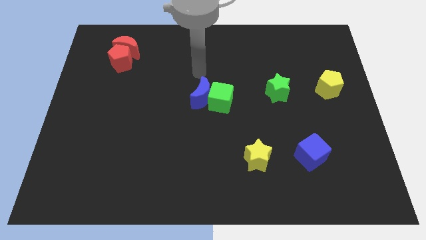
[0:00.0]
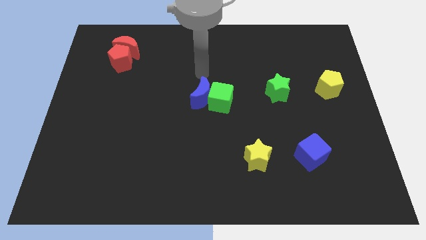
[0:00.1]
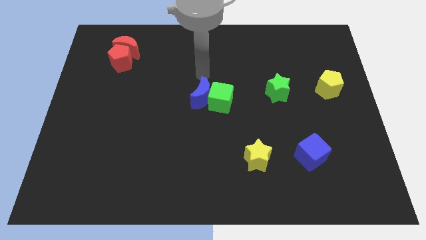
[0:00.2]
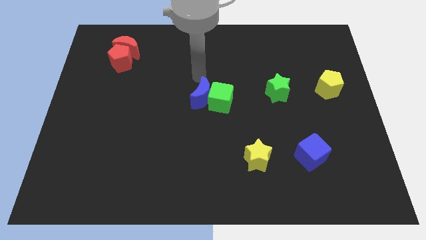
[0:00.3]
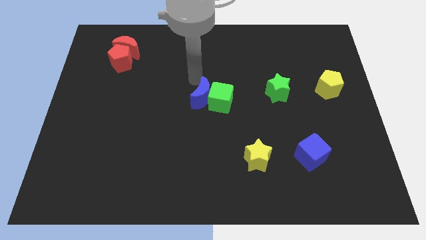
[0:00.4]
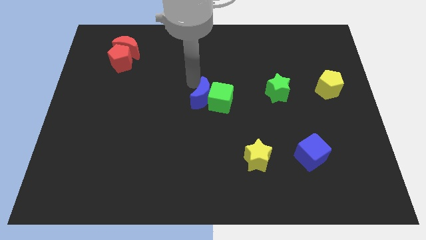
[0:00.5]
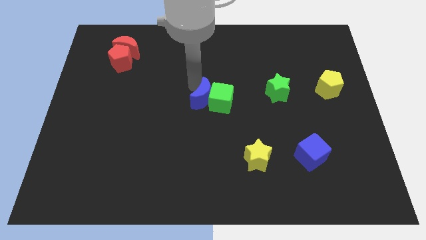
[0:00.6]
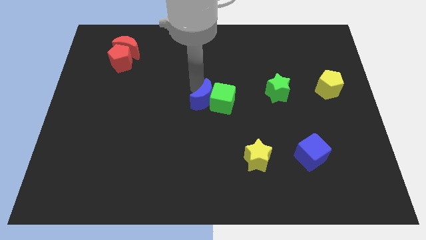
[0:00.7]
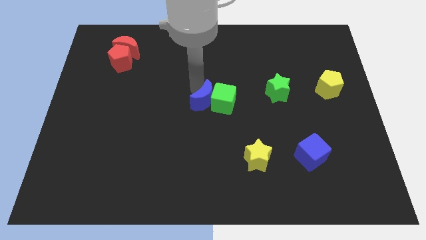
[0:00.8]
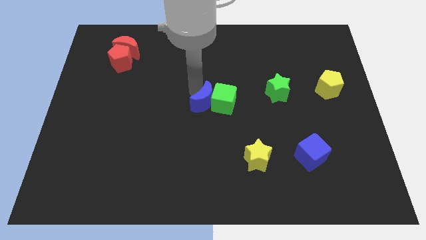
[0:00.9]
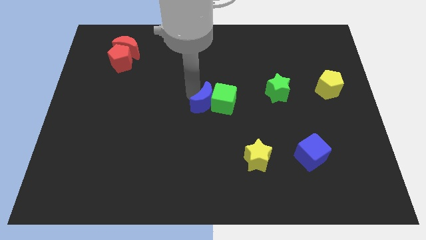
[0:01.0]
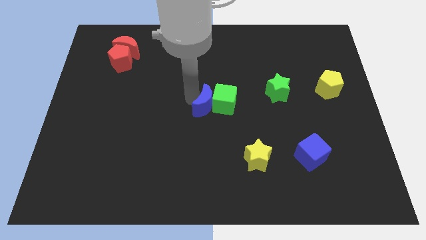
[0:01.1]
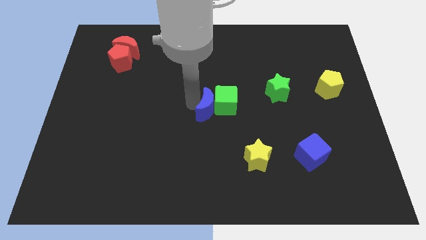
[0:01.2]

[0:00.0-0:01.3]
push the blue crescent into the green cube

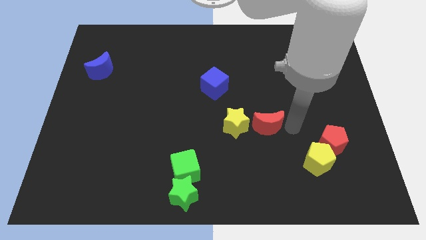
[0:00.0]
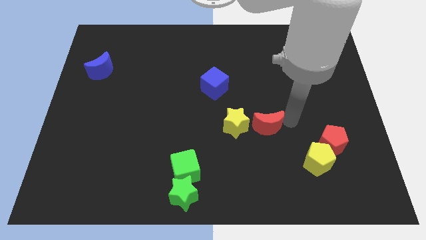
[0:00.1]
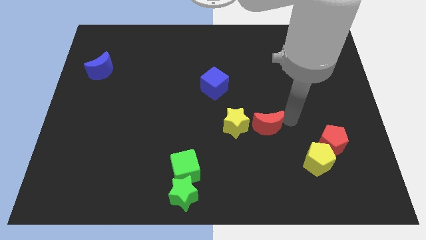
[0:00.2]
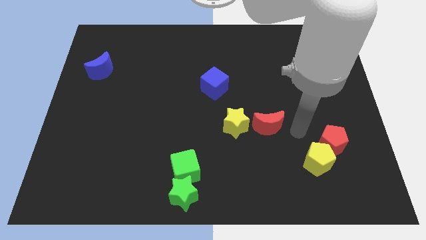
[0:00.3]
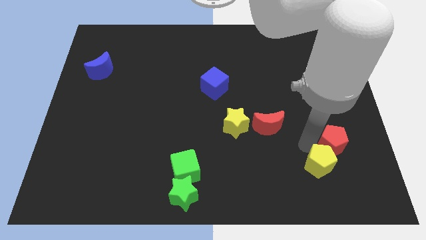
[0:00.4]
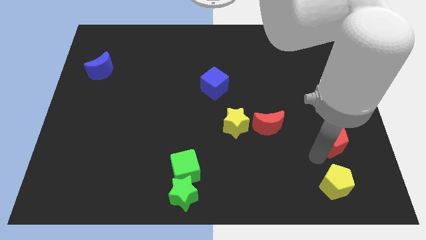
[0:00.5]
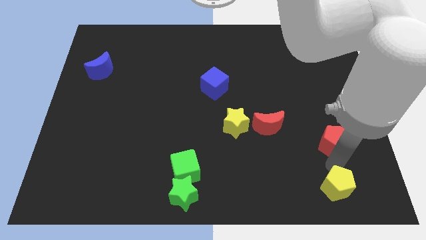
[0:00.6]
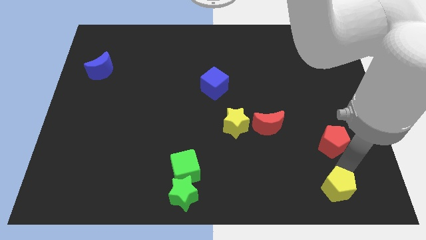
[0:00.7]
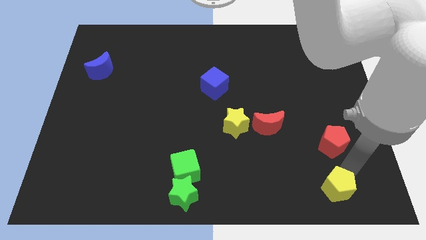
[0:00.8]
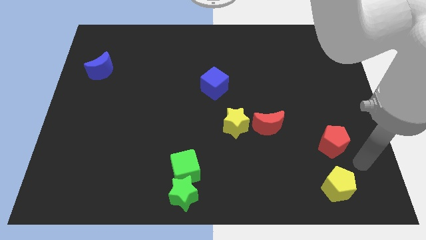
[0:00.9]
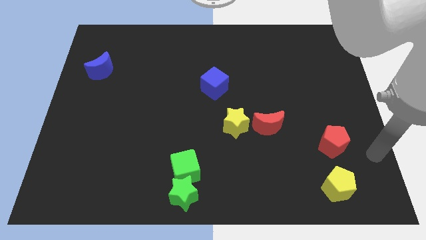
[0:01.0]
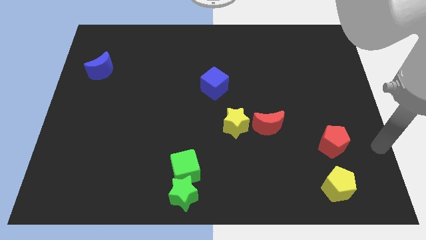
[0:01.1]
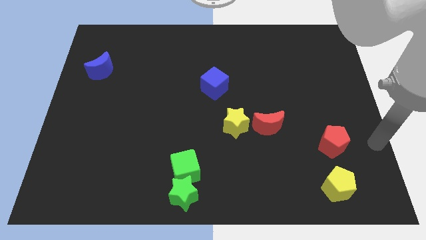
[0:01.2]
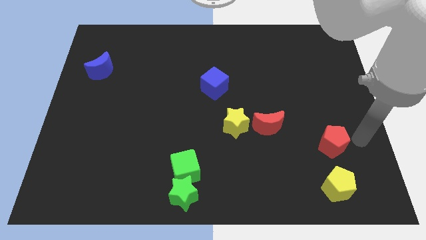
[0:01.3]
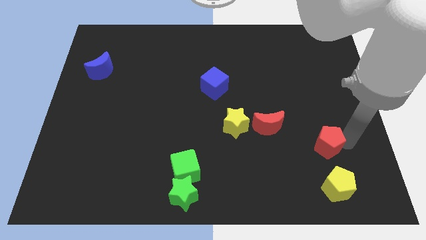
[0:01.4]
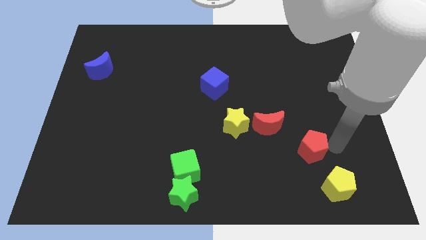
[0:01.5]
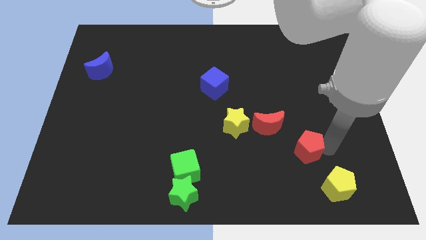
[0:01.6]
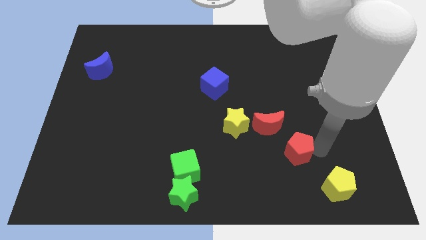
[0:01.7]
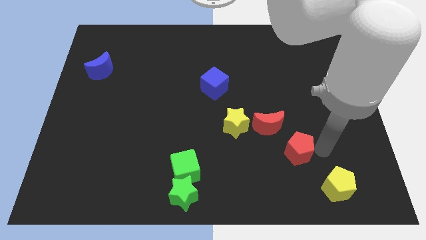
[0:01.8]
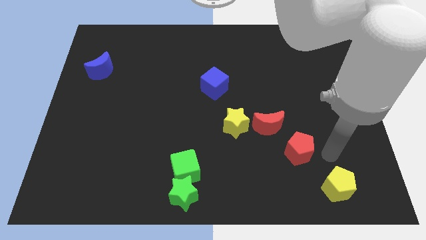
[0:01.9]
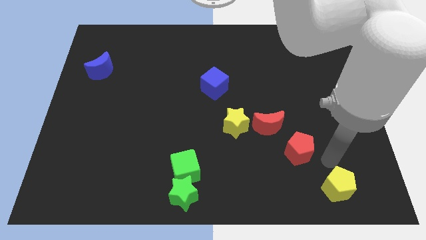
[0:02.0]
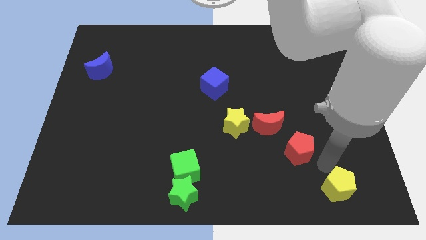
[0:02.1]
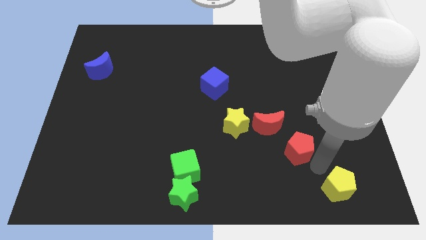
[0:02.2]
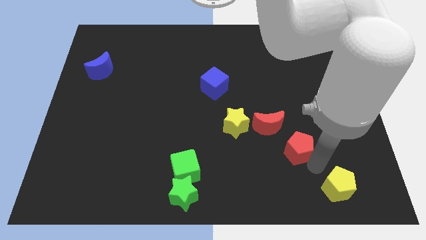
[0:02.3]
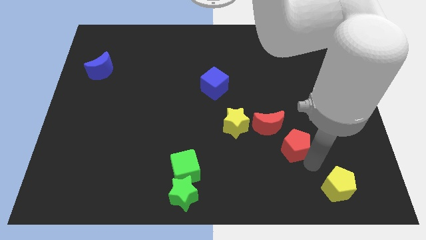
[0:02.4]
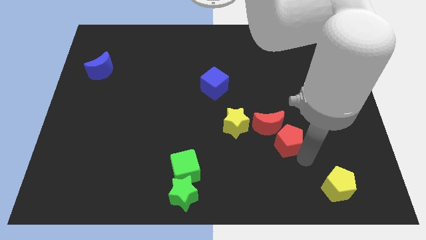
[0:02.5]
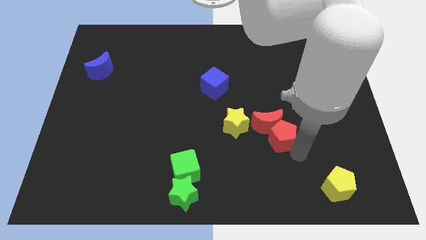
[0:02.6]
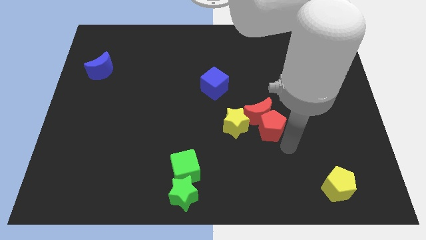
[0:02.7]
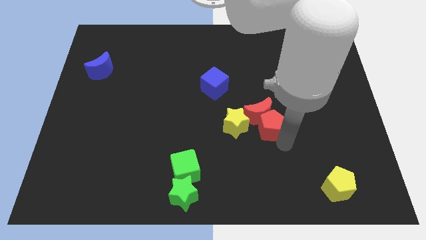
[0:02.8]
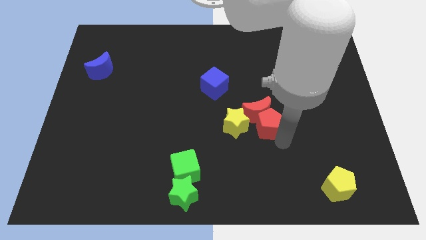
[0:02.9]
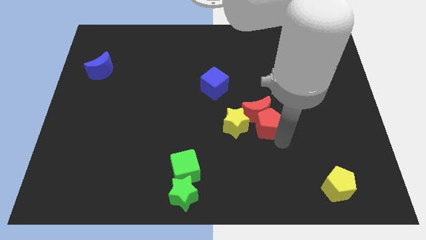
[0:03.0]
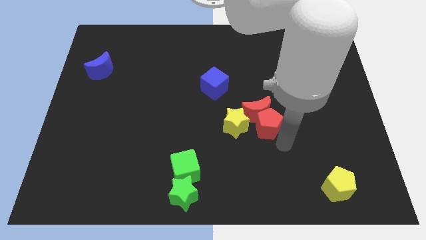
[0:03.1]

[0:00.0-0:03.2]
separate the pentagons and move red pentagon into red moon

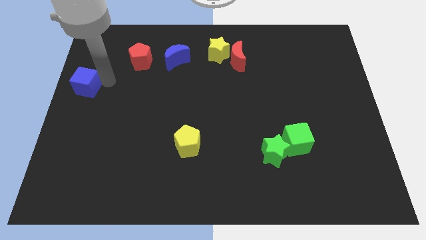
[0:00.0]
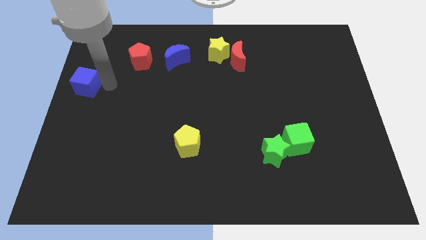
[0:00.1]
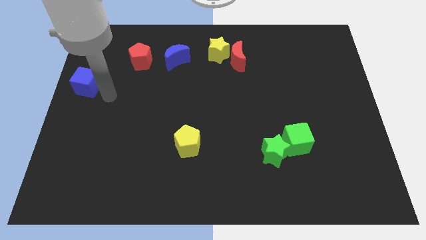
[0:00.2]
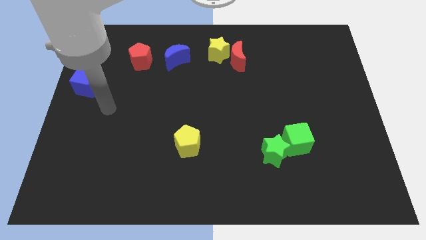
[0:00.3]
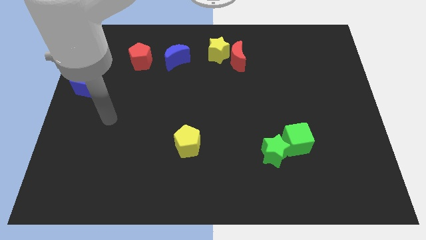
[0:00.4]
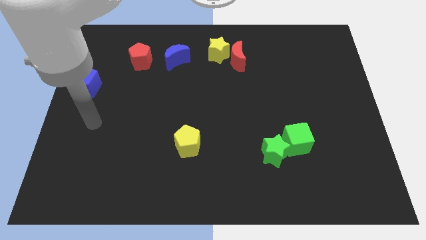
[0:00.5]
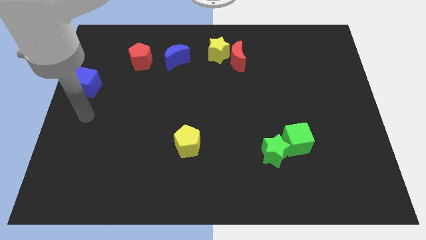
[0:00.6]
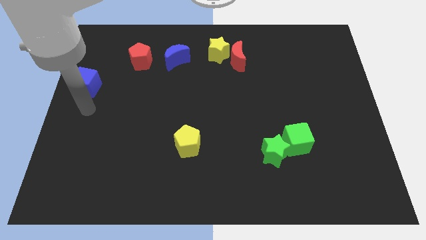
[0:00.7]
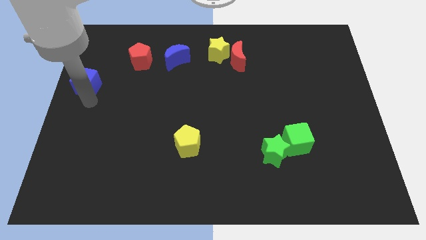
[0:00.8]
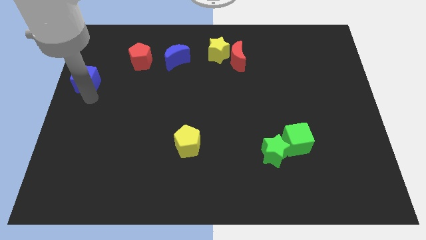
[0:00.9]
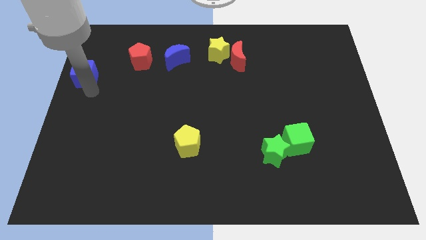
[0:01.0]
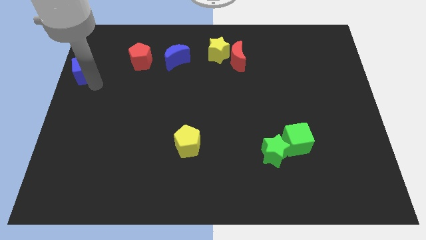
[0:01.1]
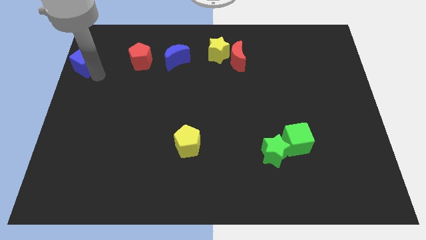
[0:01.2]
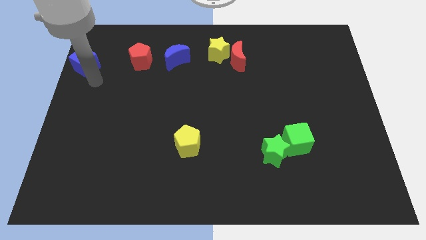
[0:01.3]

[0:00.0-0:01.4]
push the blue cube parallel left to the red pentagon

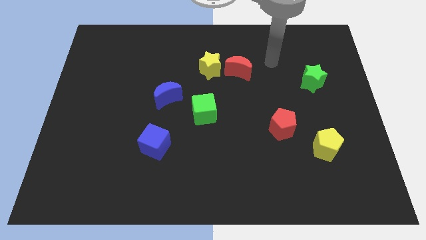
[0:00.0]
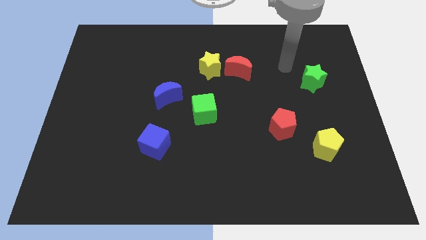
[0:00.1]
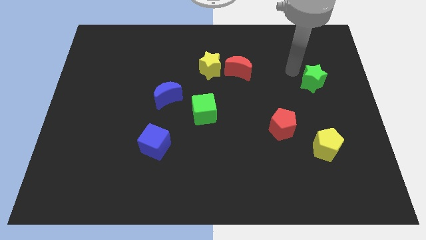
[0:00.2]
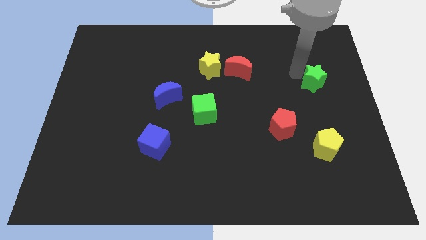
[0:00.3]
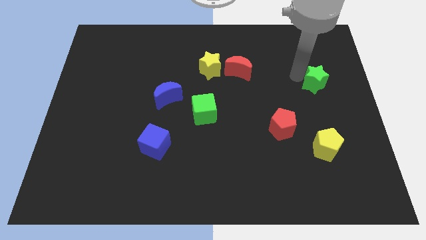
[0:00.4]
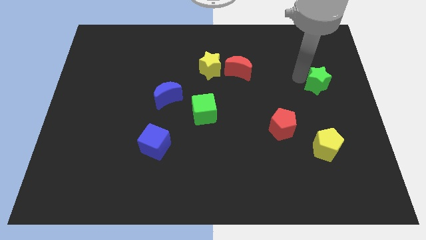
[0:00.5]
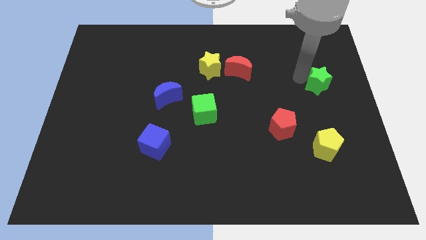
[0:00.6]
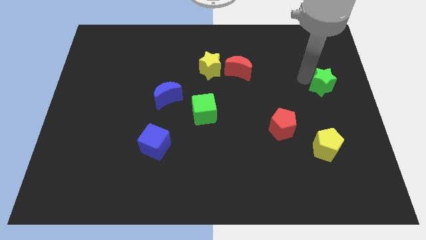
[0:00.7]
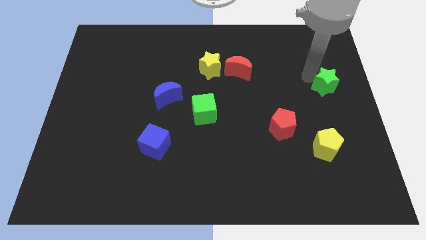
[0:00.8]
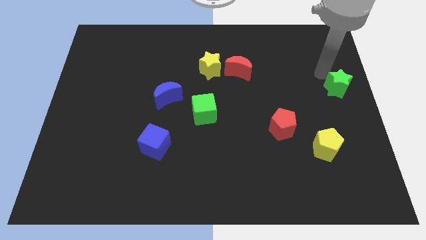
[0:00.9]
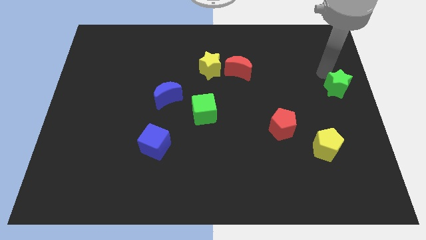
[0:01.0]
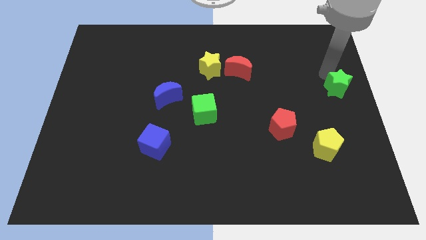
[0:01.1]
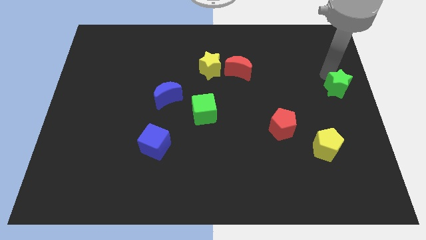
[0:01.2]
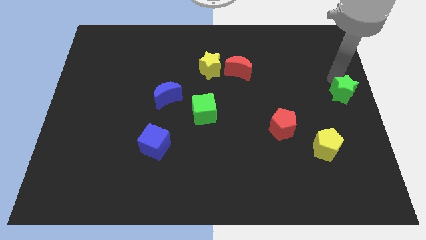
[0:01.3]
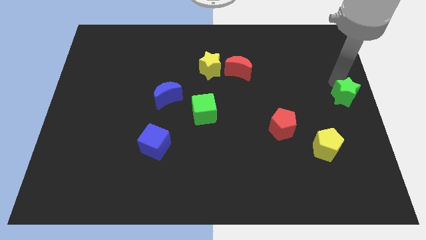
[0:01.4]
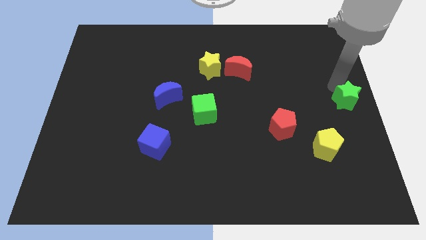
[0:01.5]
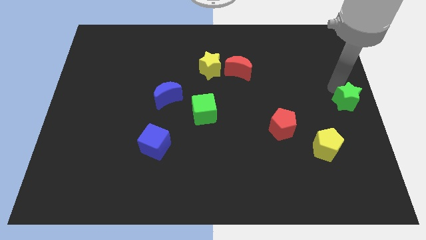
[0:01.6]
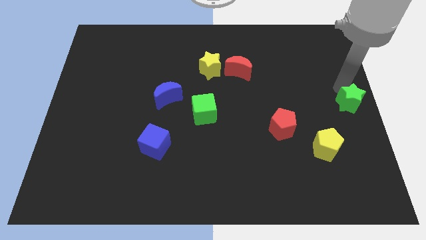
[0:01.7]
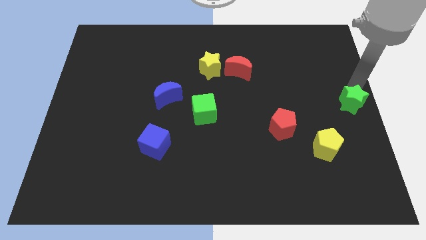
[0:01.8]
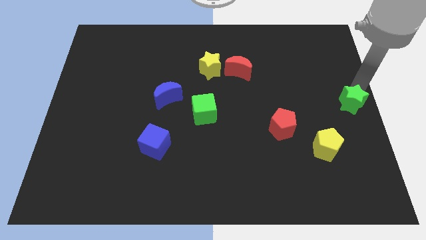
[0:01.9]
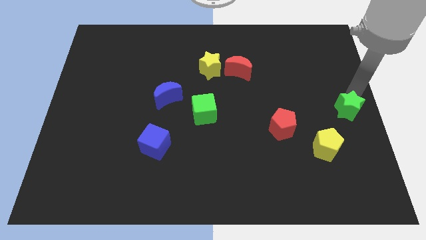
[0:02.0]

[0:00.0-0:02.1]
slide the green star towards the yellow pentagon

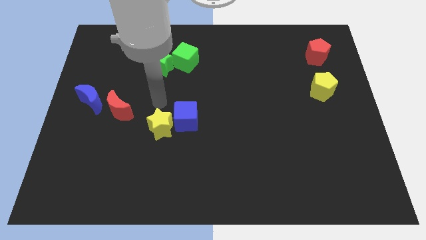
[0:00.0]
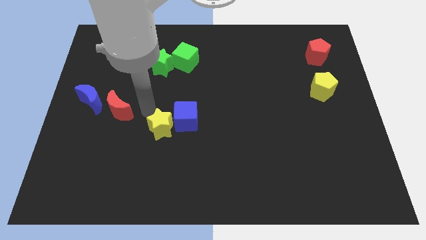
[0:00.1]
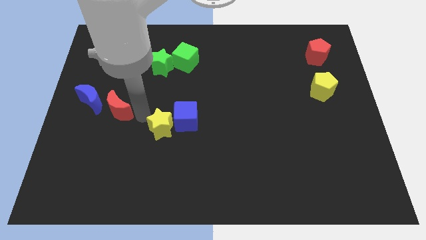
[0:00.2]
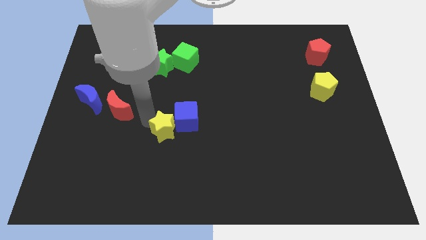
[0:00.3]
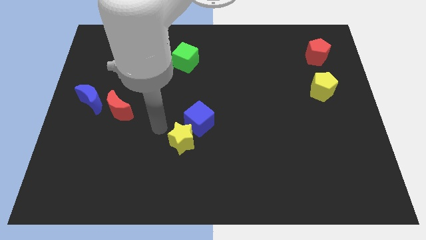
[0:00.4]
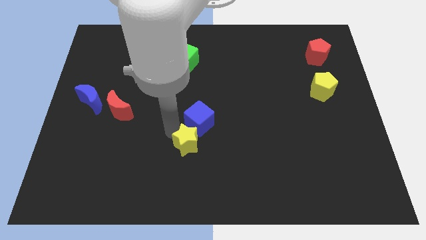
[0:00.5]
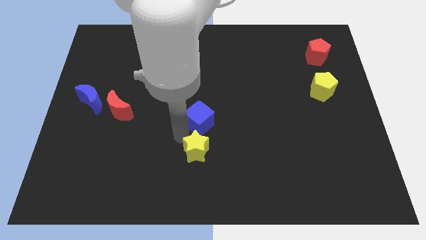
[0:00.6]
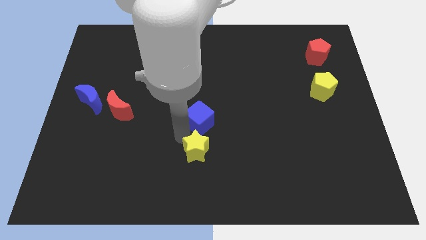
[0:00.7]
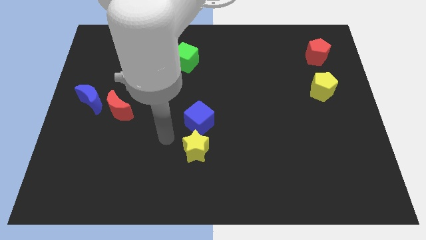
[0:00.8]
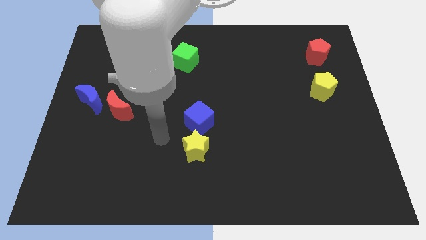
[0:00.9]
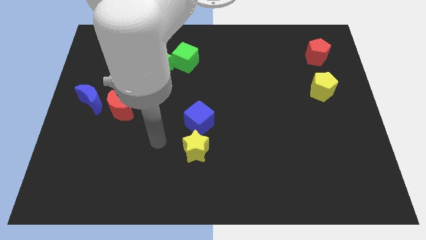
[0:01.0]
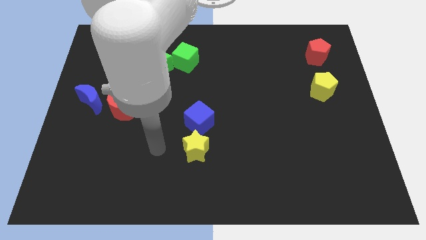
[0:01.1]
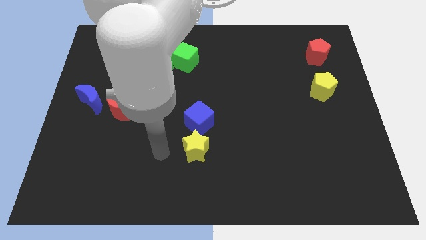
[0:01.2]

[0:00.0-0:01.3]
place the yellow star below the blue cube
